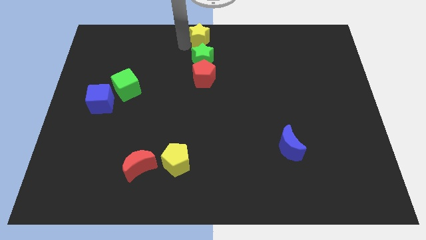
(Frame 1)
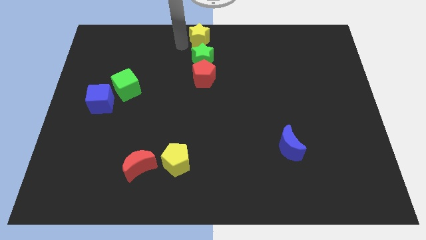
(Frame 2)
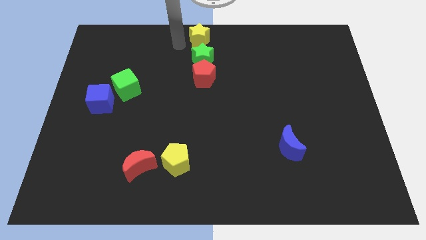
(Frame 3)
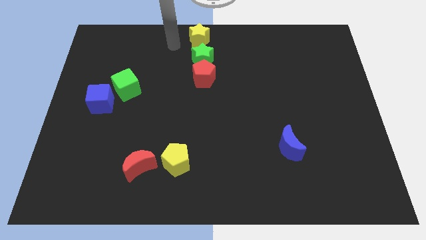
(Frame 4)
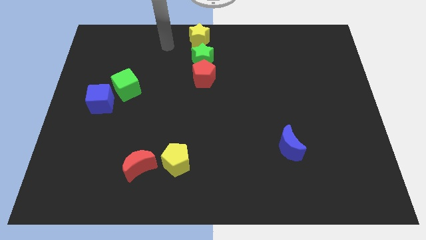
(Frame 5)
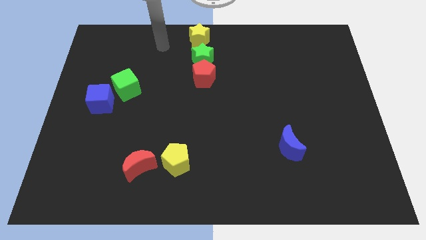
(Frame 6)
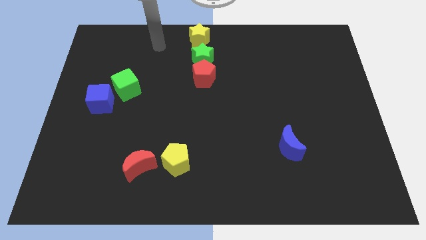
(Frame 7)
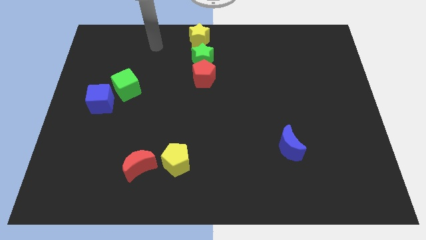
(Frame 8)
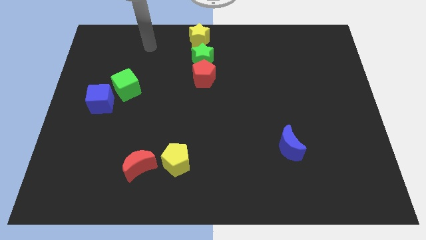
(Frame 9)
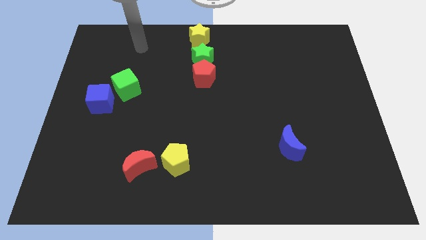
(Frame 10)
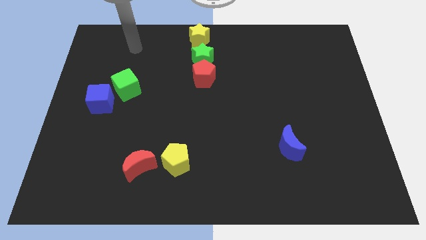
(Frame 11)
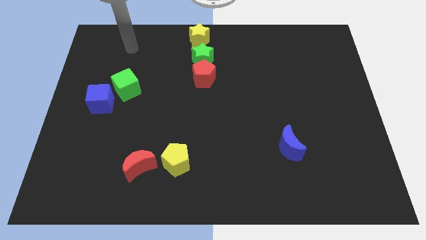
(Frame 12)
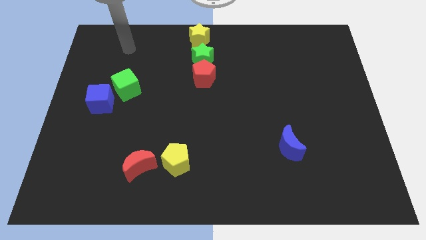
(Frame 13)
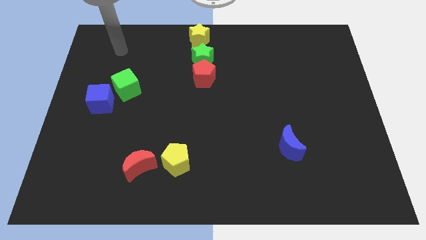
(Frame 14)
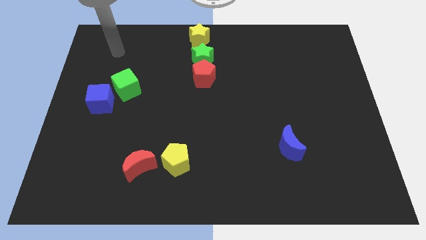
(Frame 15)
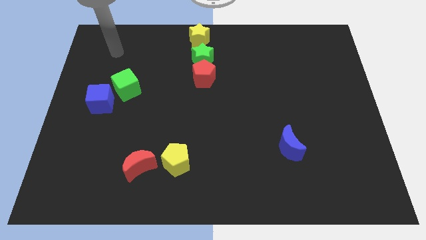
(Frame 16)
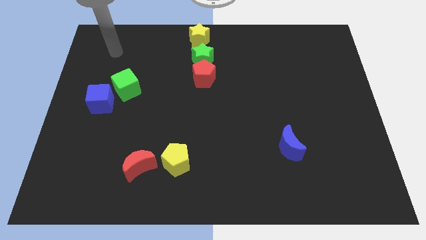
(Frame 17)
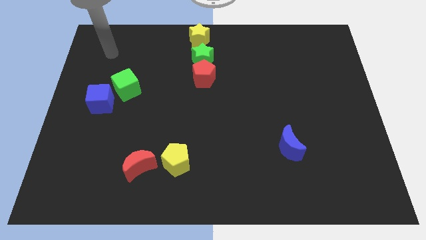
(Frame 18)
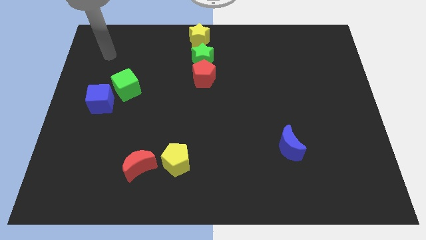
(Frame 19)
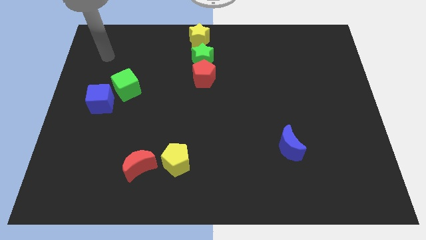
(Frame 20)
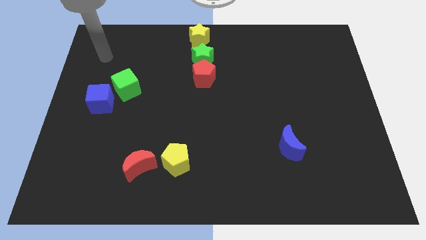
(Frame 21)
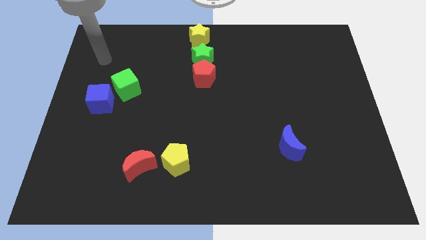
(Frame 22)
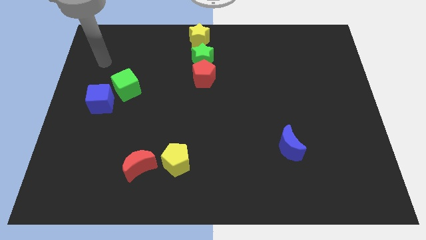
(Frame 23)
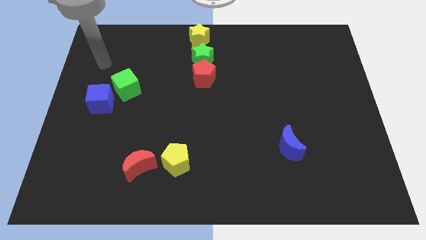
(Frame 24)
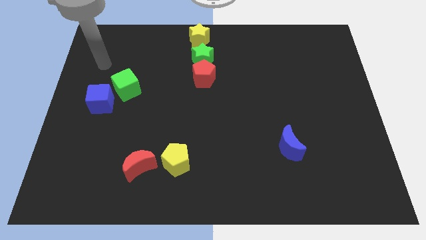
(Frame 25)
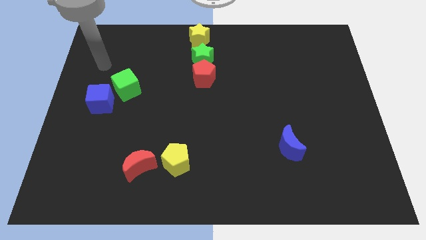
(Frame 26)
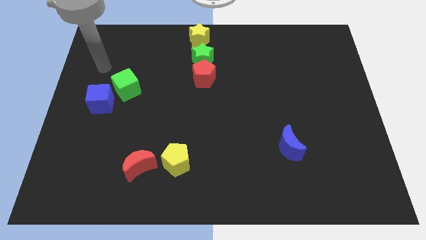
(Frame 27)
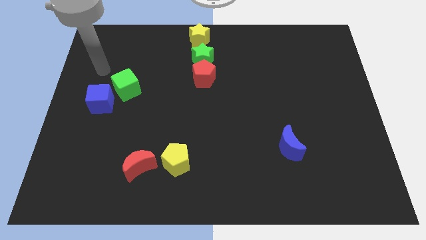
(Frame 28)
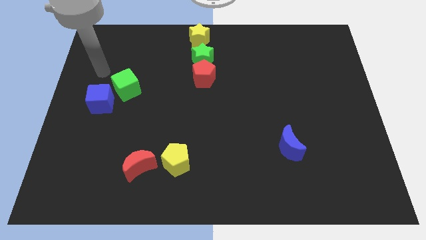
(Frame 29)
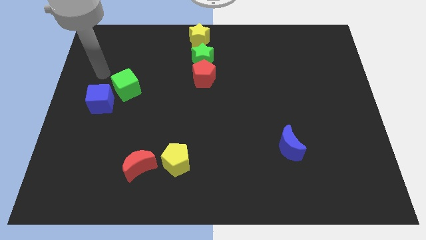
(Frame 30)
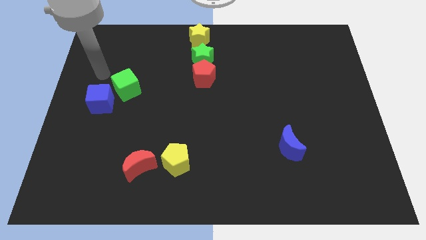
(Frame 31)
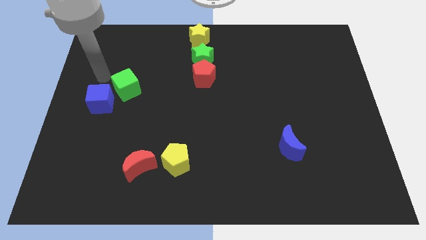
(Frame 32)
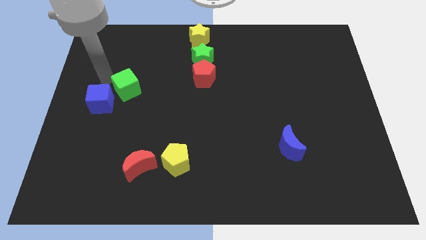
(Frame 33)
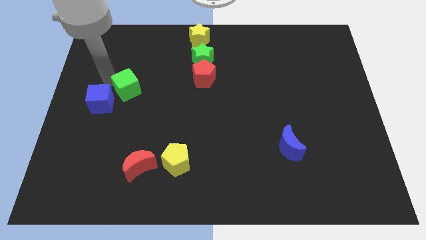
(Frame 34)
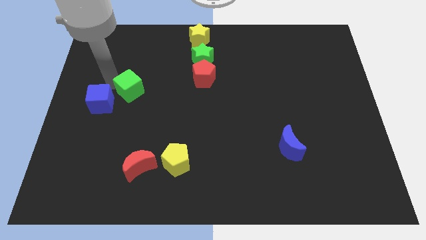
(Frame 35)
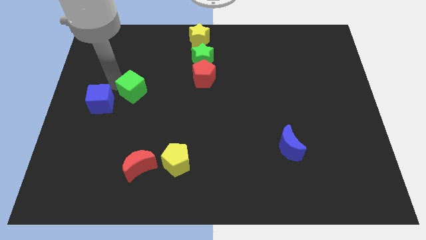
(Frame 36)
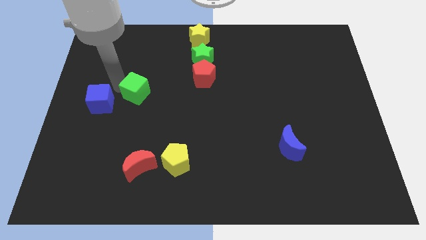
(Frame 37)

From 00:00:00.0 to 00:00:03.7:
move your arm away from the yellow star

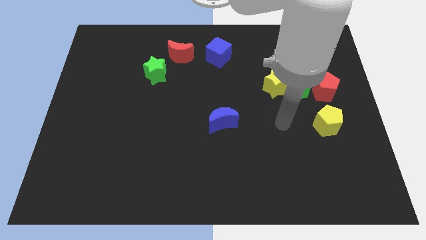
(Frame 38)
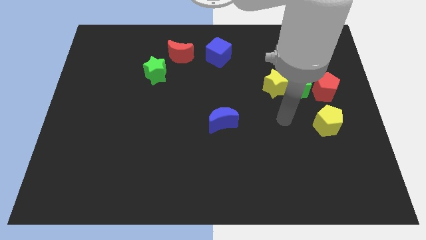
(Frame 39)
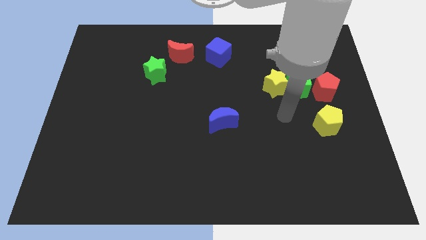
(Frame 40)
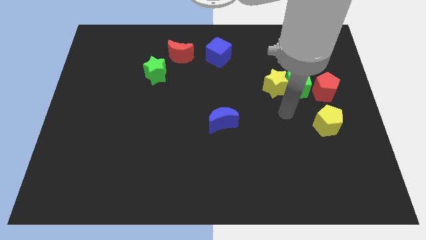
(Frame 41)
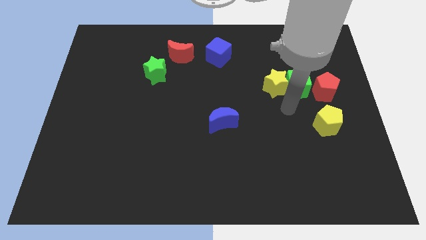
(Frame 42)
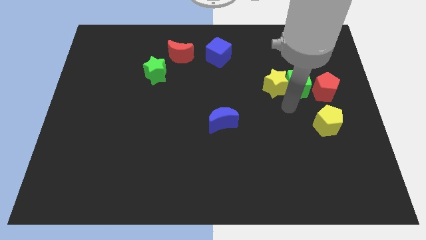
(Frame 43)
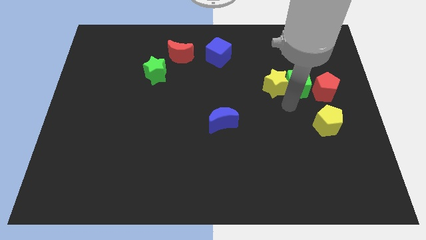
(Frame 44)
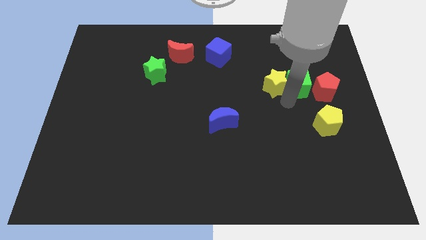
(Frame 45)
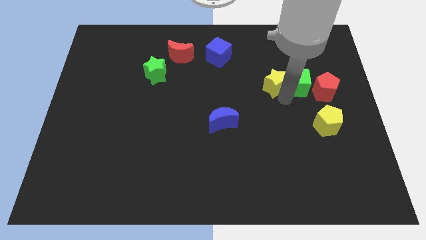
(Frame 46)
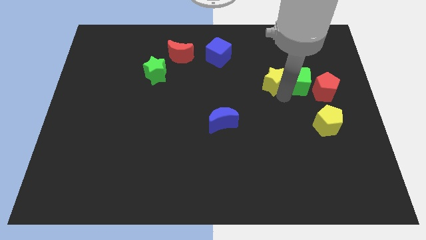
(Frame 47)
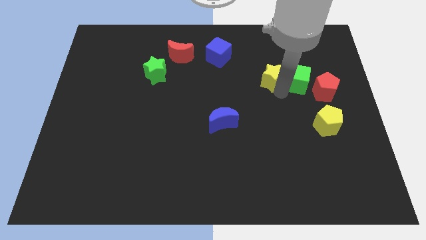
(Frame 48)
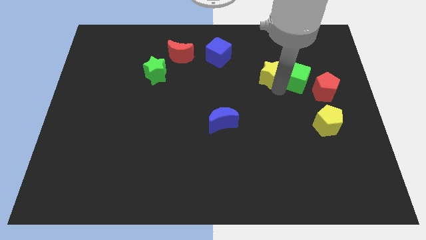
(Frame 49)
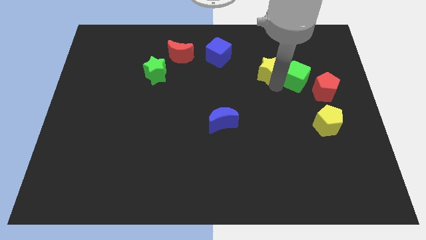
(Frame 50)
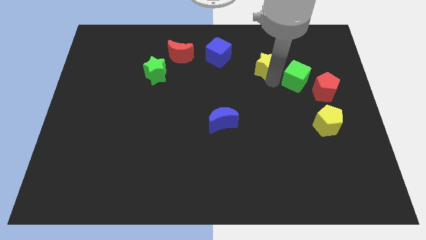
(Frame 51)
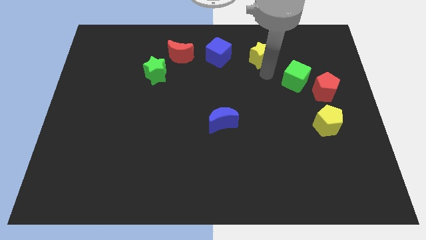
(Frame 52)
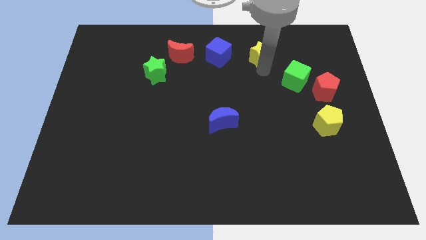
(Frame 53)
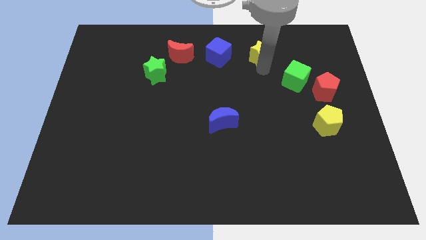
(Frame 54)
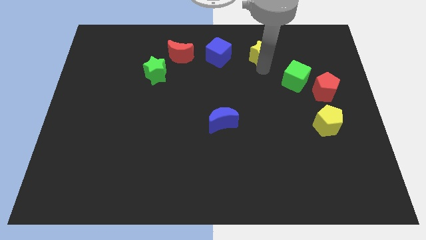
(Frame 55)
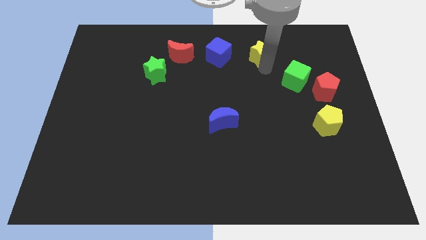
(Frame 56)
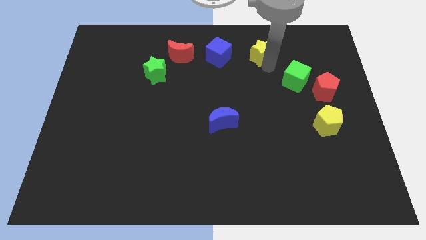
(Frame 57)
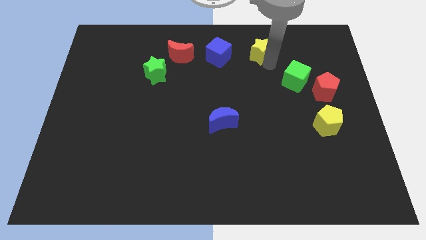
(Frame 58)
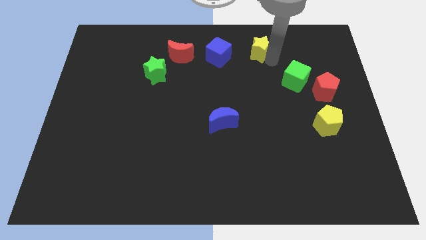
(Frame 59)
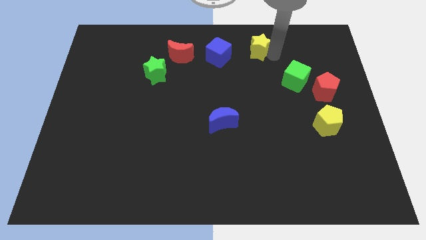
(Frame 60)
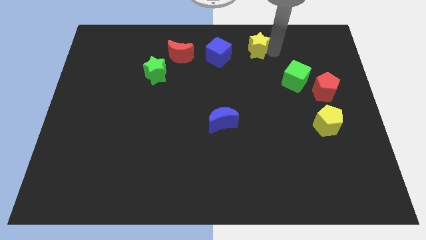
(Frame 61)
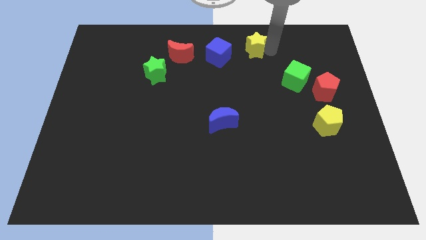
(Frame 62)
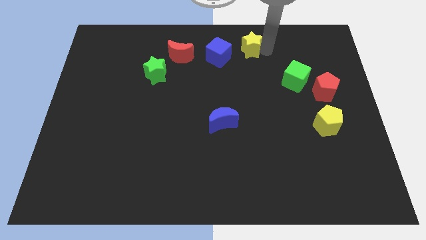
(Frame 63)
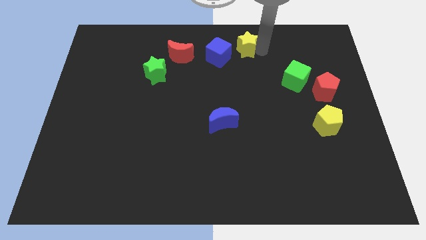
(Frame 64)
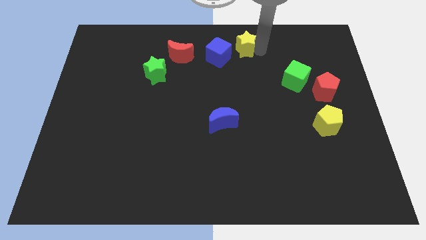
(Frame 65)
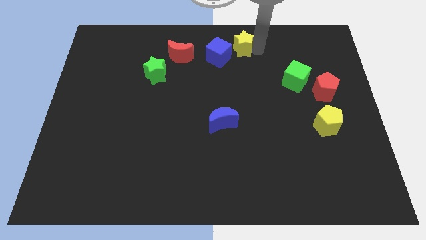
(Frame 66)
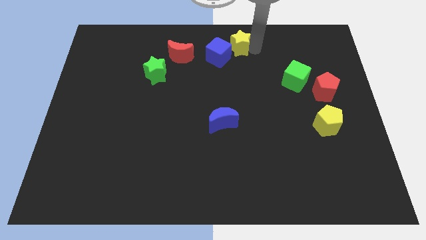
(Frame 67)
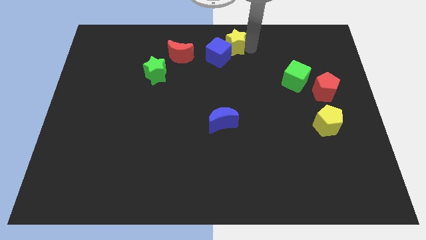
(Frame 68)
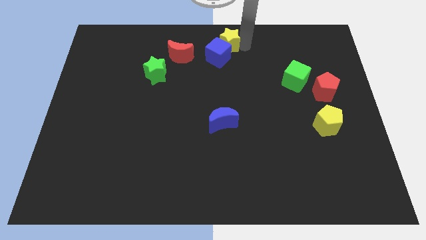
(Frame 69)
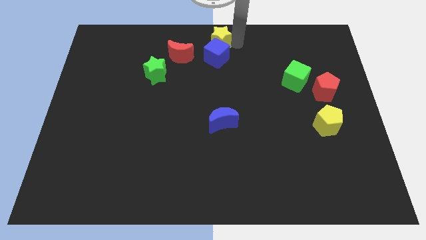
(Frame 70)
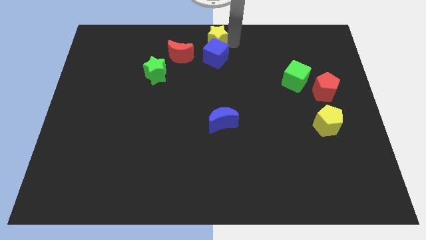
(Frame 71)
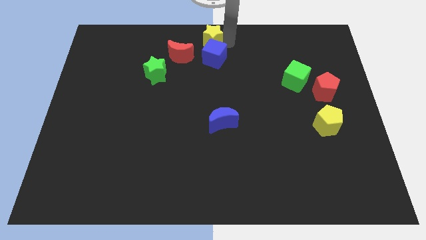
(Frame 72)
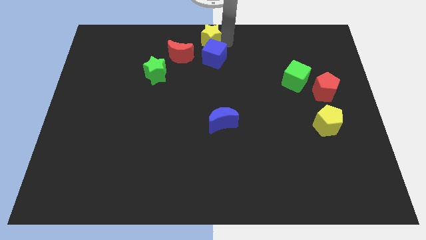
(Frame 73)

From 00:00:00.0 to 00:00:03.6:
separate the yellow star from the blue cube

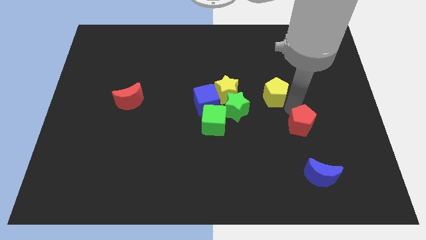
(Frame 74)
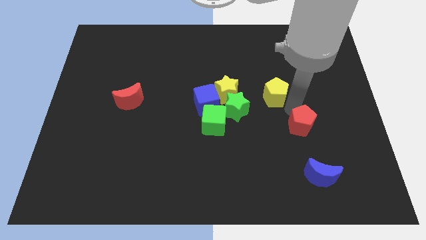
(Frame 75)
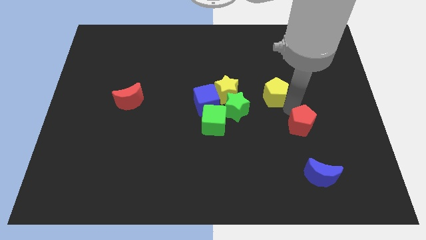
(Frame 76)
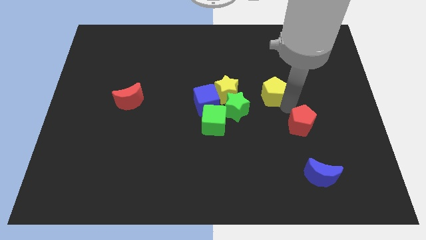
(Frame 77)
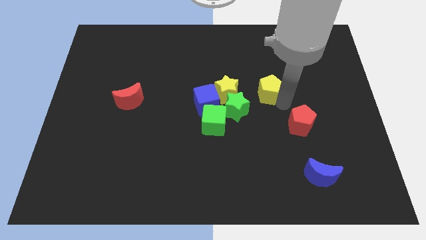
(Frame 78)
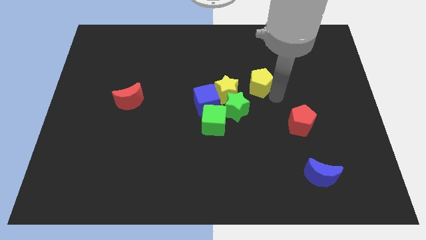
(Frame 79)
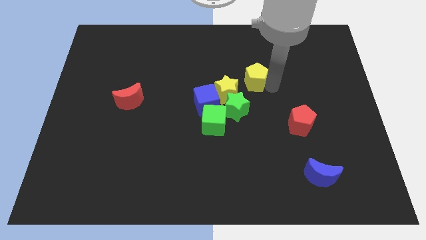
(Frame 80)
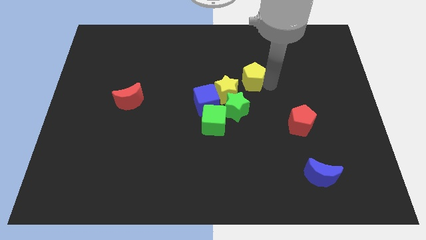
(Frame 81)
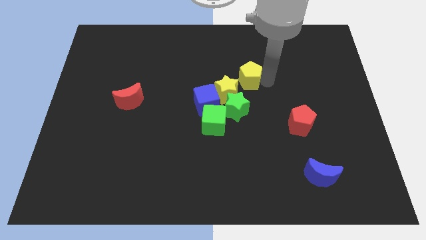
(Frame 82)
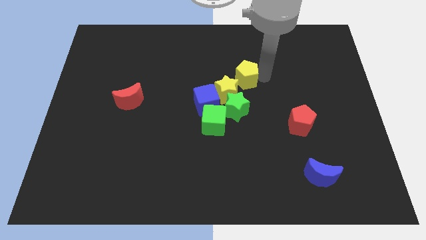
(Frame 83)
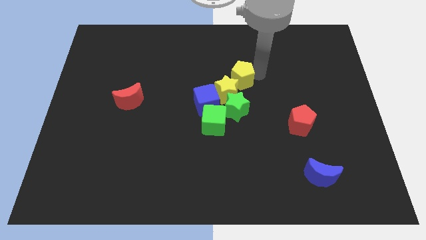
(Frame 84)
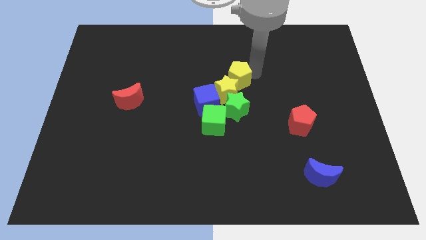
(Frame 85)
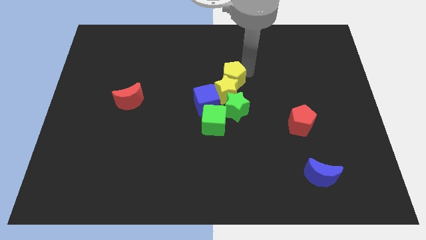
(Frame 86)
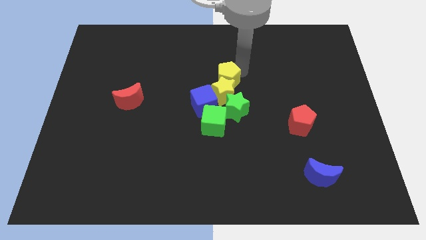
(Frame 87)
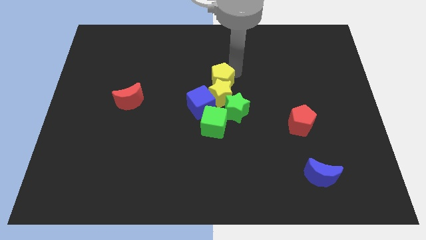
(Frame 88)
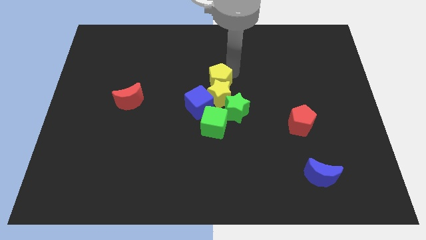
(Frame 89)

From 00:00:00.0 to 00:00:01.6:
place the yellow pentagon above the yellow star

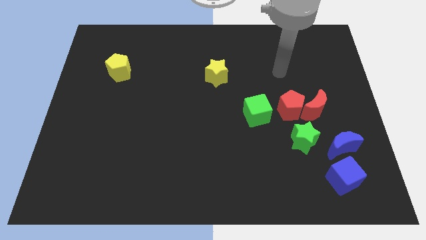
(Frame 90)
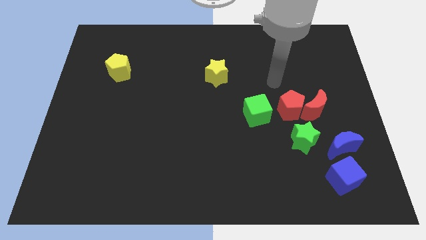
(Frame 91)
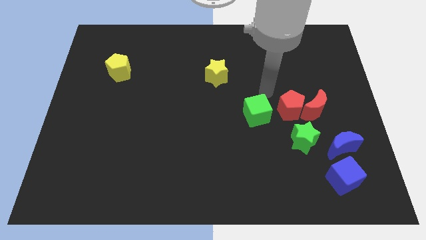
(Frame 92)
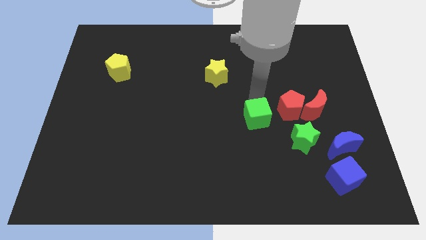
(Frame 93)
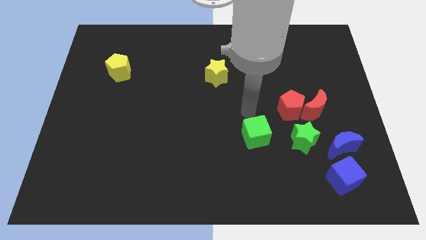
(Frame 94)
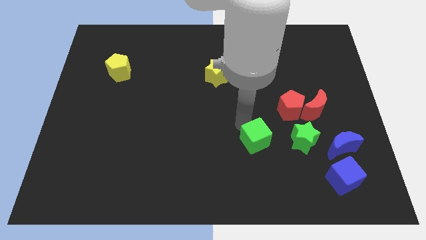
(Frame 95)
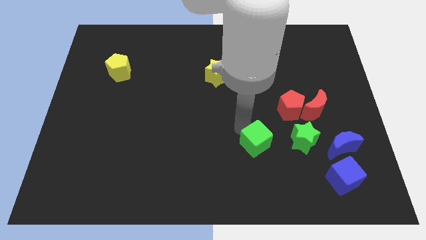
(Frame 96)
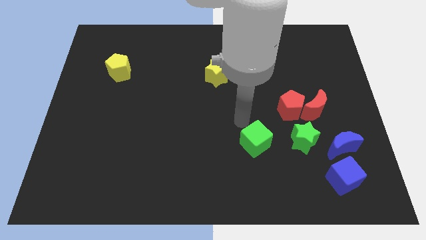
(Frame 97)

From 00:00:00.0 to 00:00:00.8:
move green cube parallel left to green star
